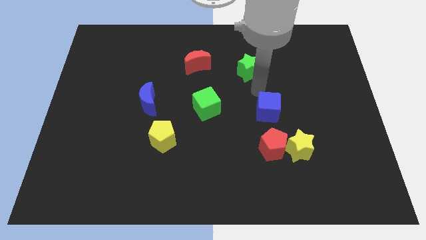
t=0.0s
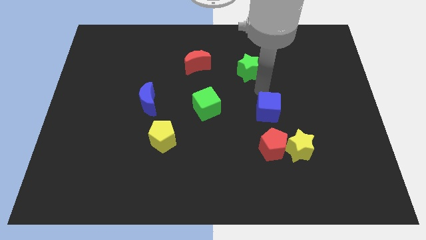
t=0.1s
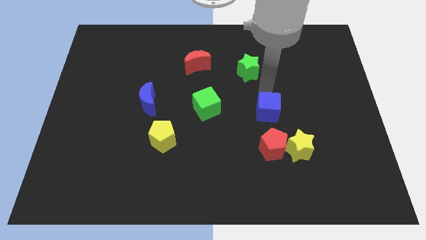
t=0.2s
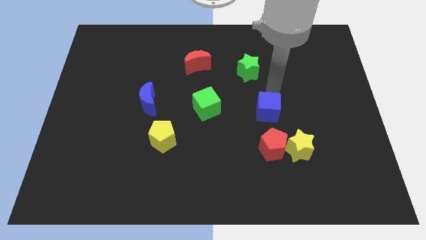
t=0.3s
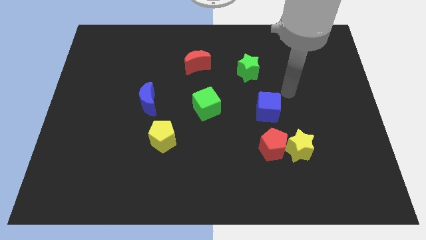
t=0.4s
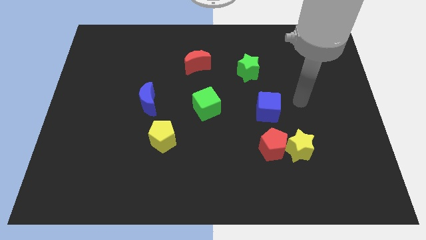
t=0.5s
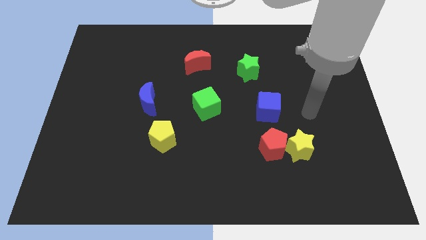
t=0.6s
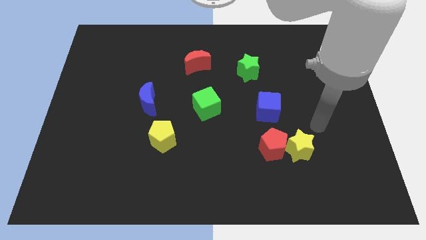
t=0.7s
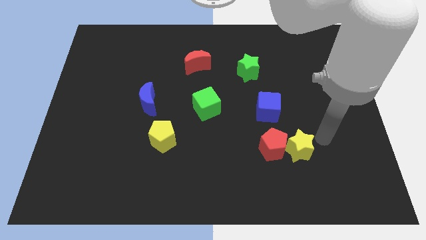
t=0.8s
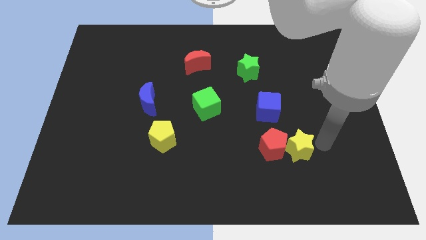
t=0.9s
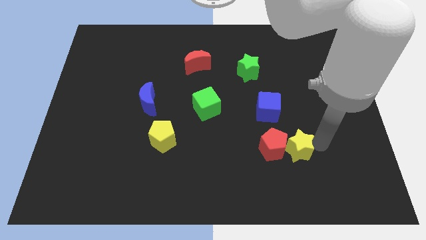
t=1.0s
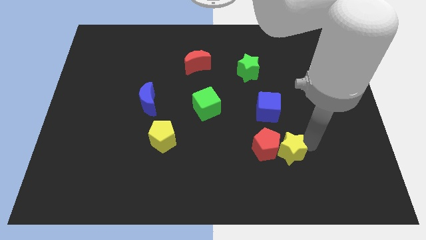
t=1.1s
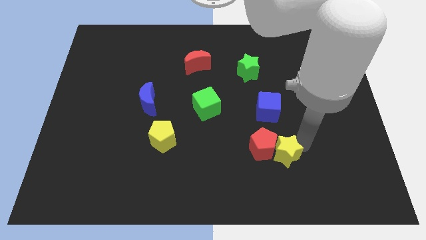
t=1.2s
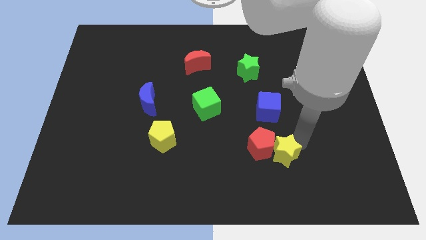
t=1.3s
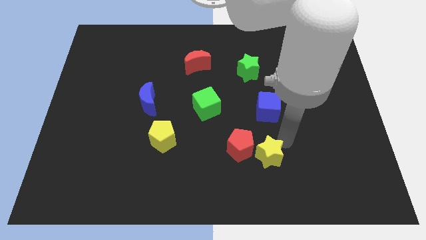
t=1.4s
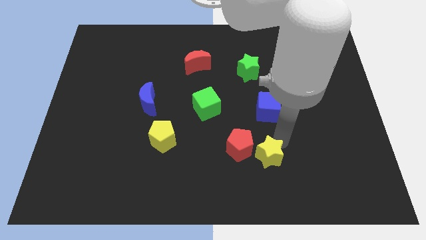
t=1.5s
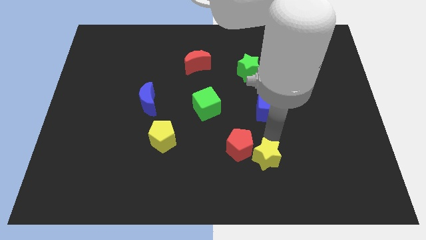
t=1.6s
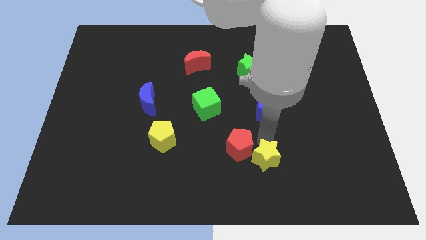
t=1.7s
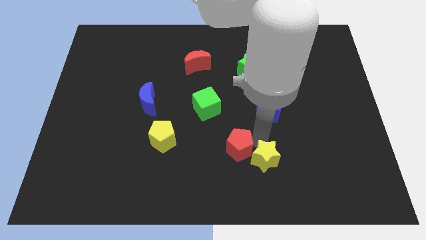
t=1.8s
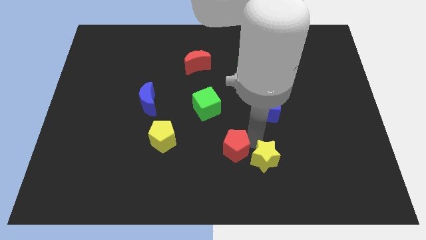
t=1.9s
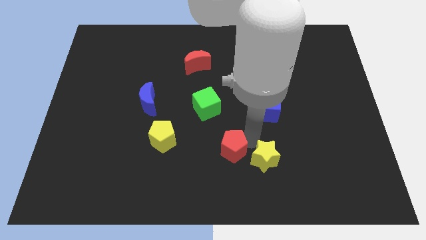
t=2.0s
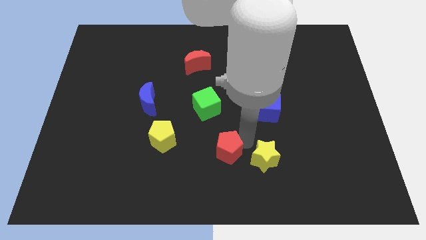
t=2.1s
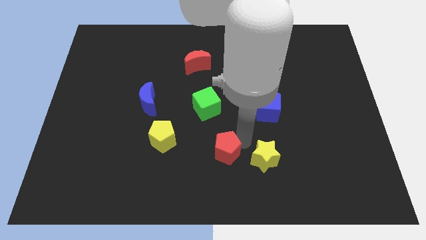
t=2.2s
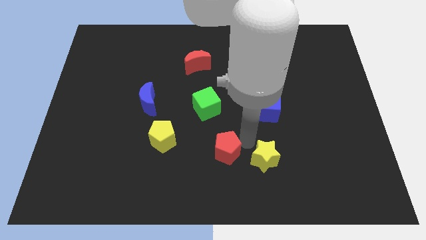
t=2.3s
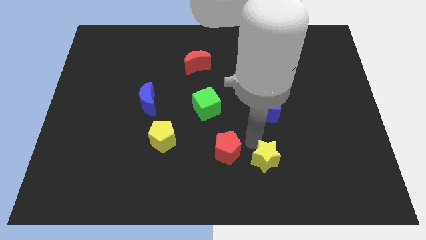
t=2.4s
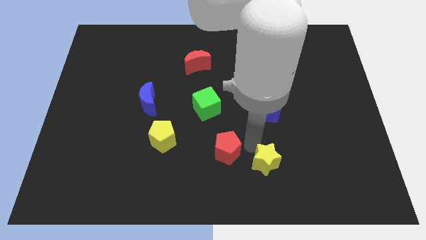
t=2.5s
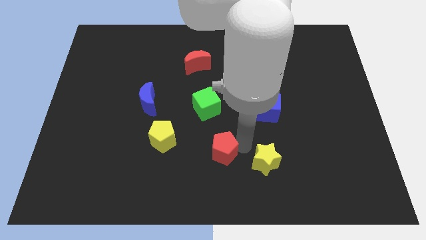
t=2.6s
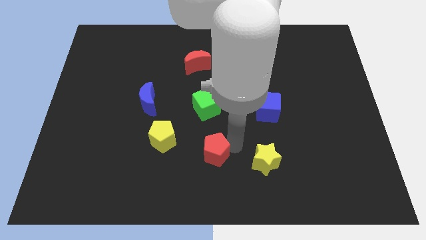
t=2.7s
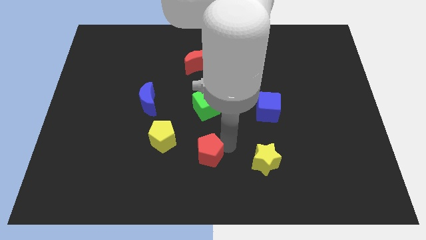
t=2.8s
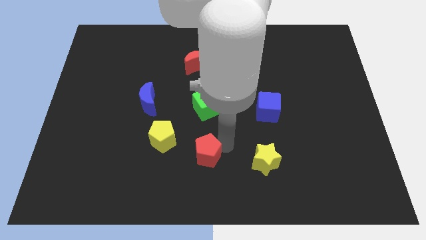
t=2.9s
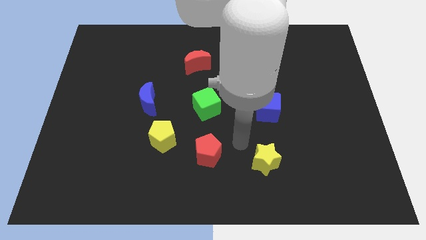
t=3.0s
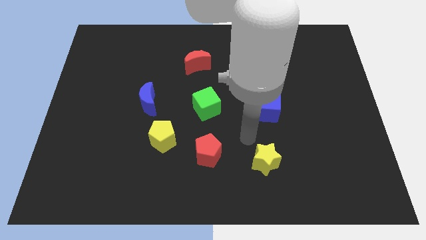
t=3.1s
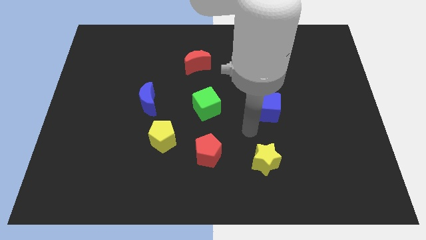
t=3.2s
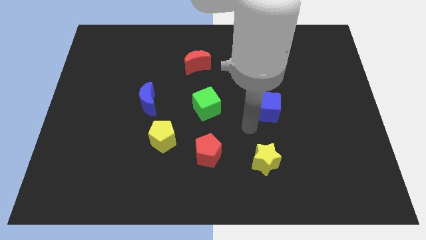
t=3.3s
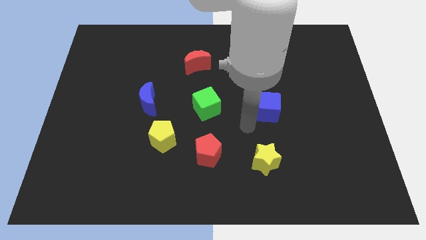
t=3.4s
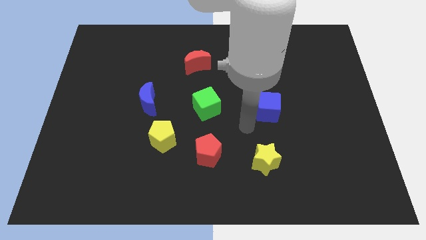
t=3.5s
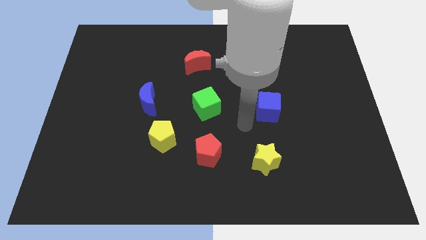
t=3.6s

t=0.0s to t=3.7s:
place the red pentagon in between the yellow pentagon and yellow star

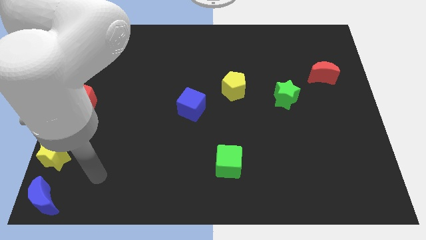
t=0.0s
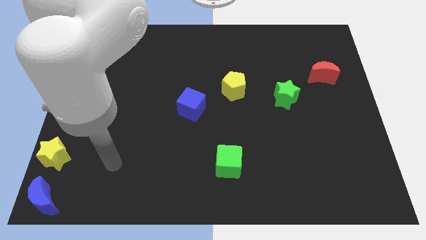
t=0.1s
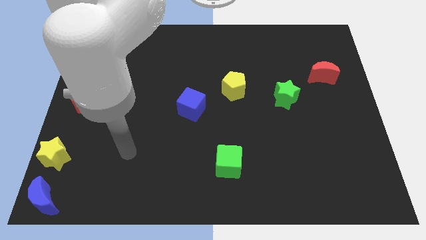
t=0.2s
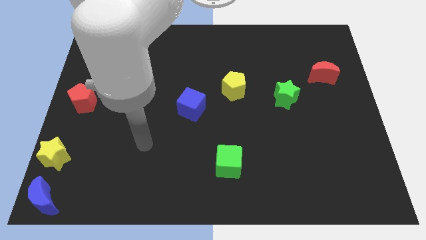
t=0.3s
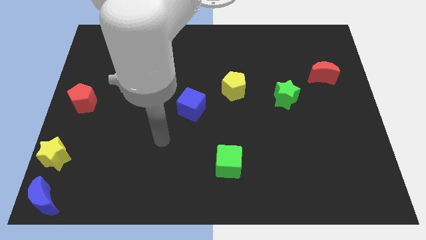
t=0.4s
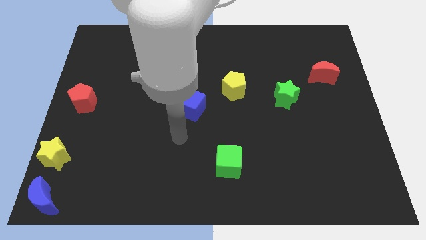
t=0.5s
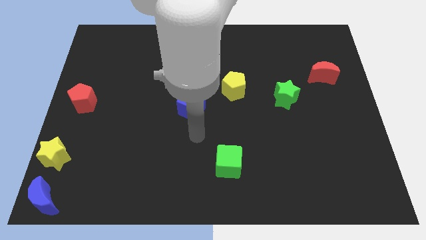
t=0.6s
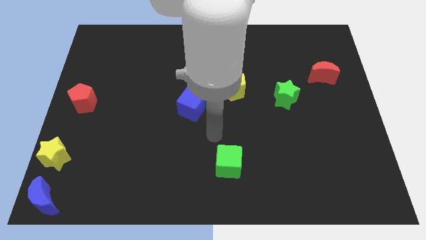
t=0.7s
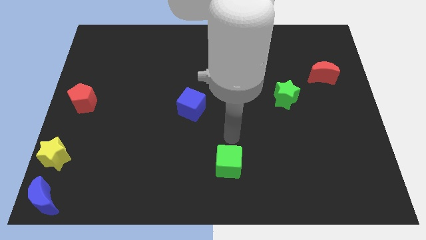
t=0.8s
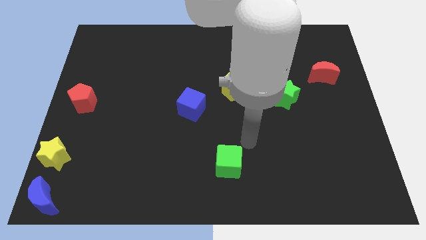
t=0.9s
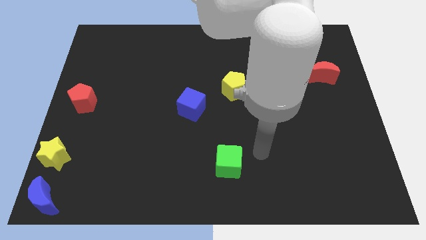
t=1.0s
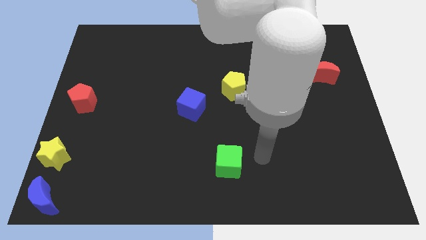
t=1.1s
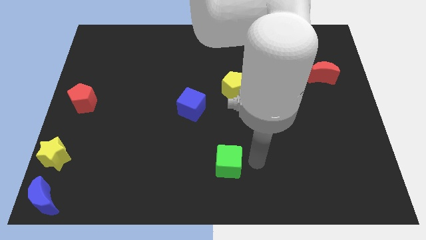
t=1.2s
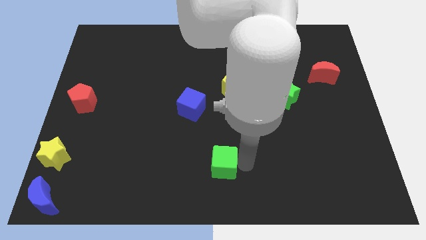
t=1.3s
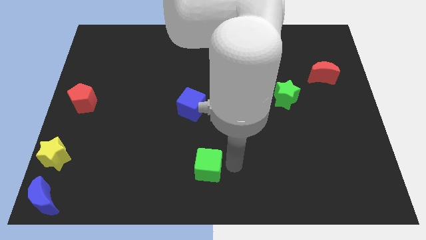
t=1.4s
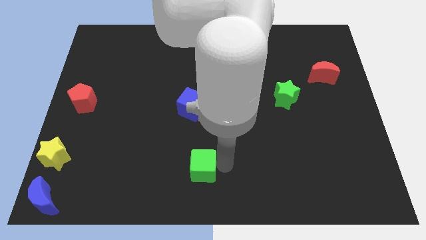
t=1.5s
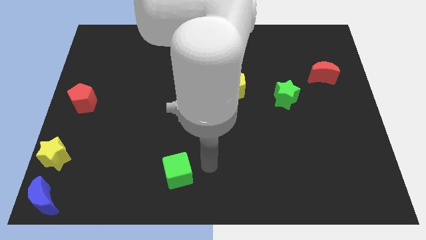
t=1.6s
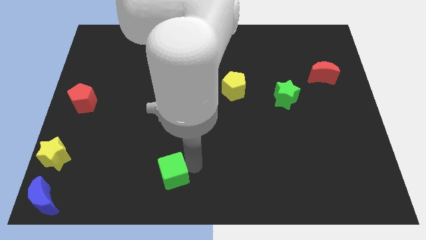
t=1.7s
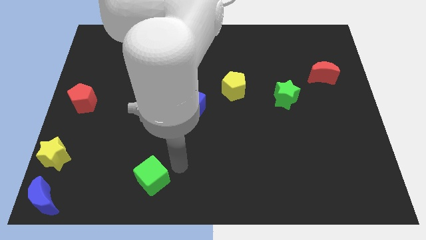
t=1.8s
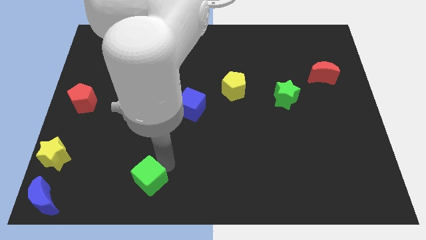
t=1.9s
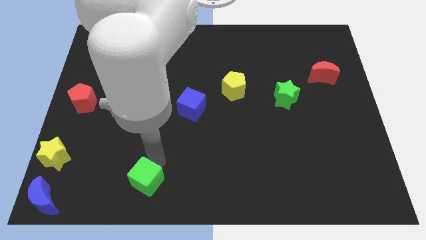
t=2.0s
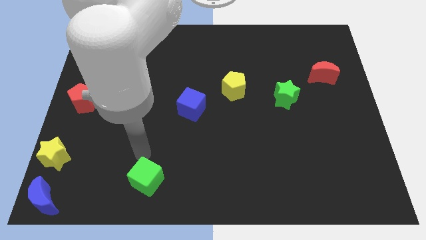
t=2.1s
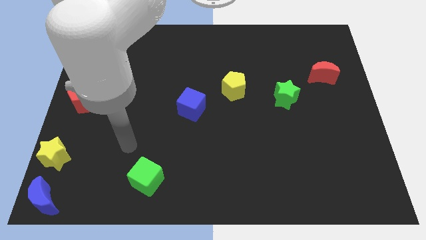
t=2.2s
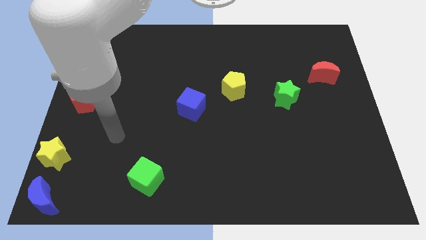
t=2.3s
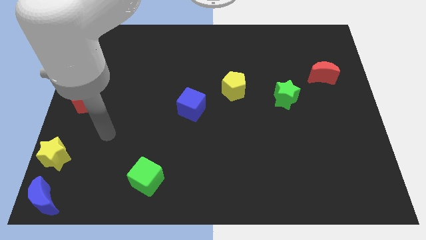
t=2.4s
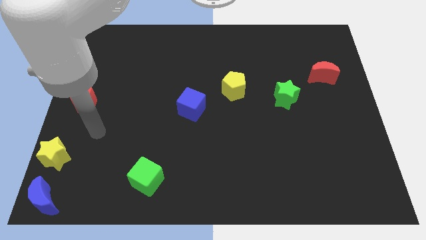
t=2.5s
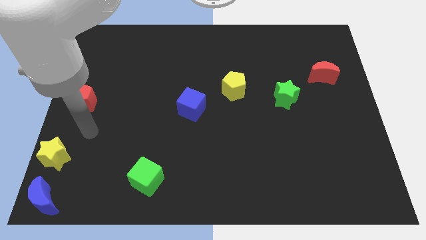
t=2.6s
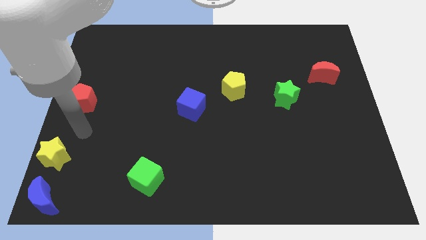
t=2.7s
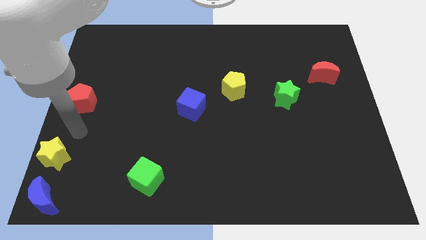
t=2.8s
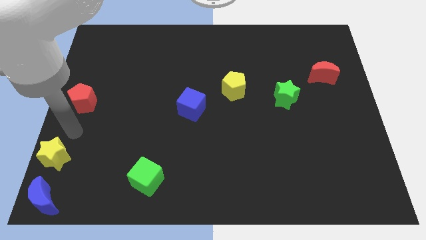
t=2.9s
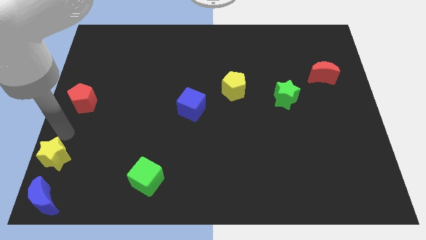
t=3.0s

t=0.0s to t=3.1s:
push the green cube towards the left of the board

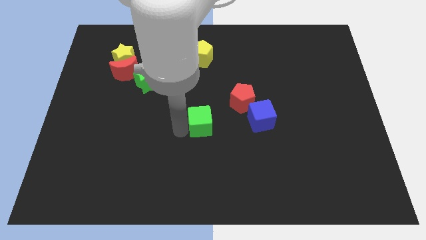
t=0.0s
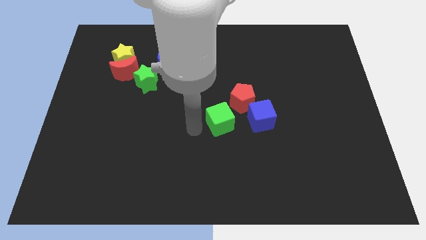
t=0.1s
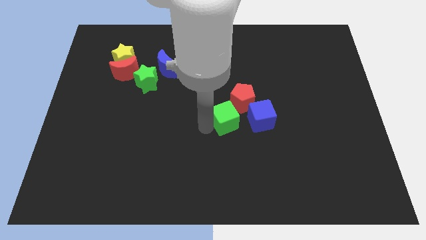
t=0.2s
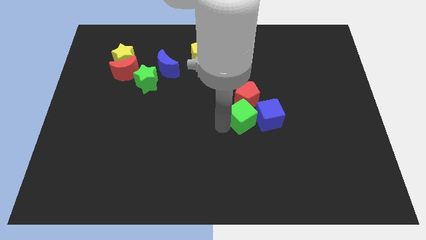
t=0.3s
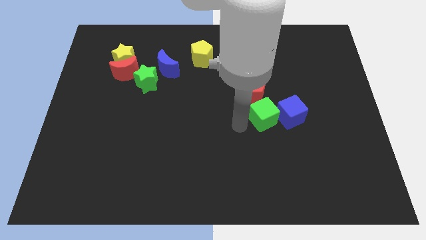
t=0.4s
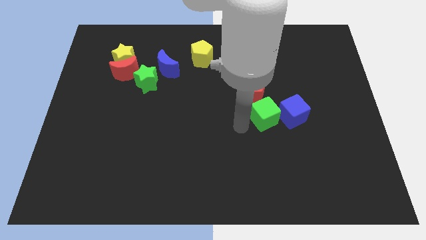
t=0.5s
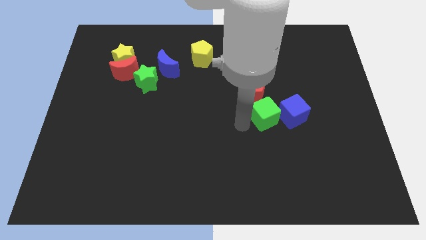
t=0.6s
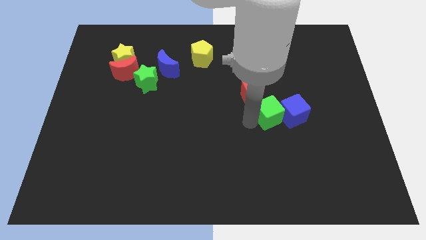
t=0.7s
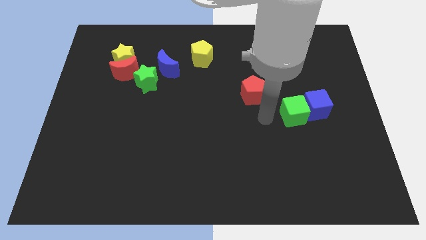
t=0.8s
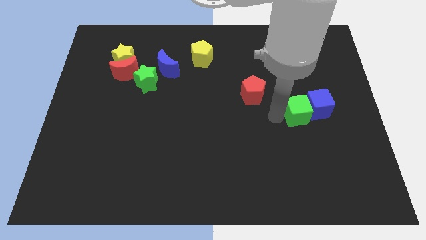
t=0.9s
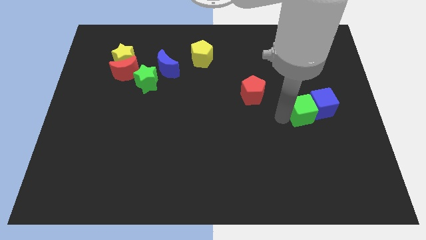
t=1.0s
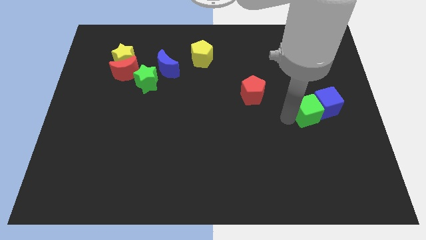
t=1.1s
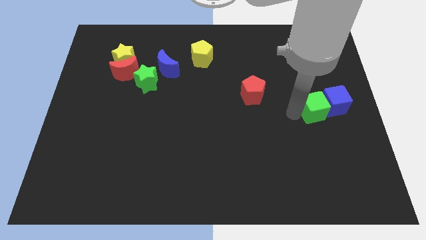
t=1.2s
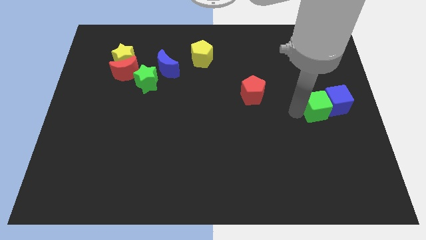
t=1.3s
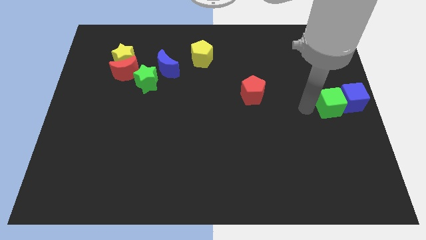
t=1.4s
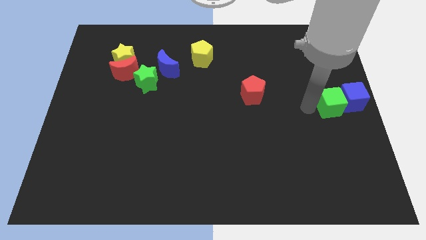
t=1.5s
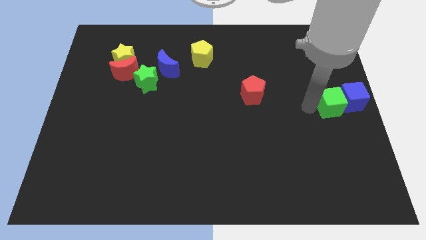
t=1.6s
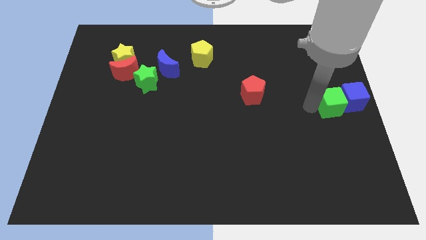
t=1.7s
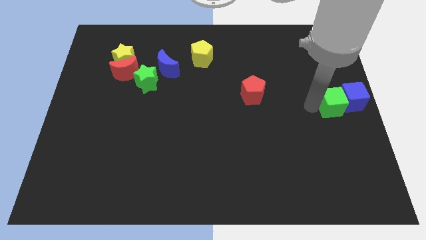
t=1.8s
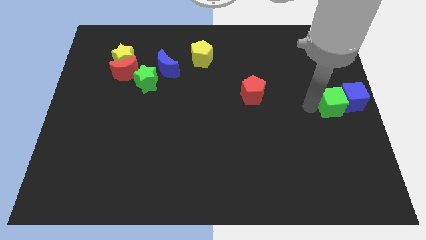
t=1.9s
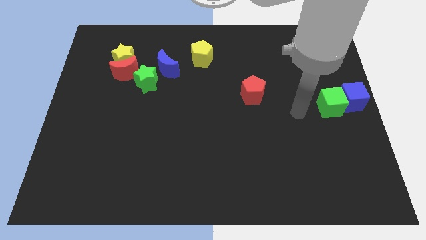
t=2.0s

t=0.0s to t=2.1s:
push the blue cube to the center right with the green cube
